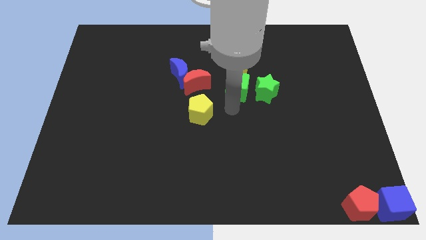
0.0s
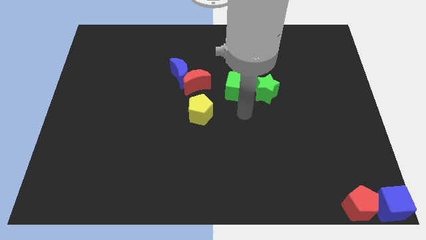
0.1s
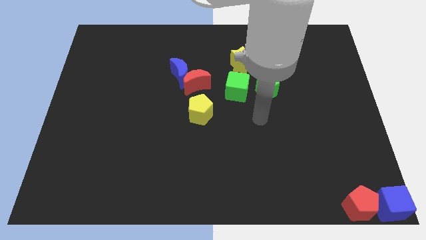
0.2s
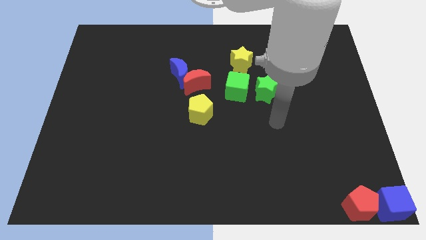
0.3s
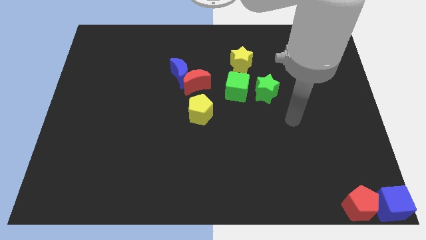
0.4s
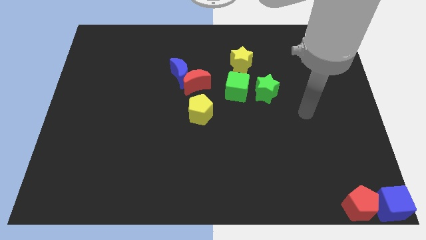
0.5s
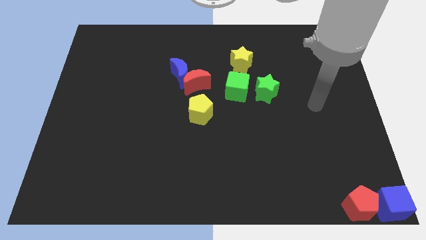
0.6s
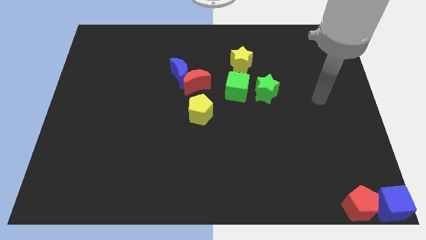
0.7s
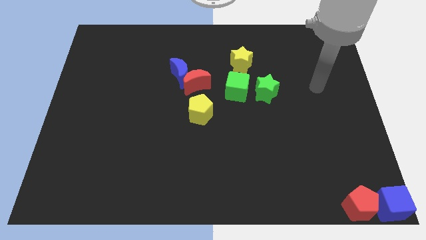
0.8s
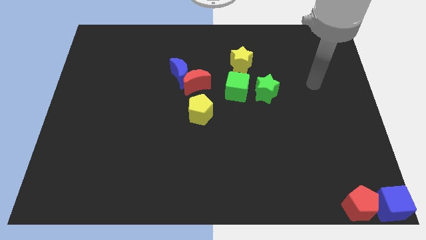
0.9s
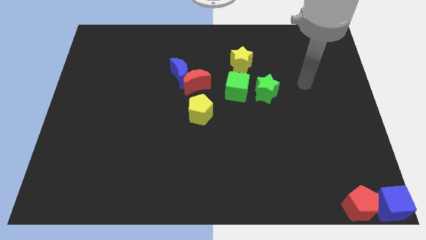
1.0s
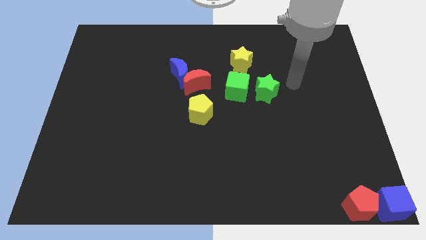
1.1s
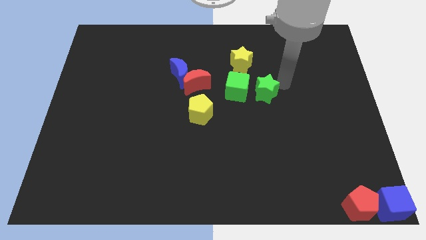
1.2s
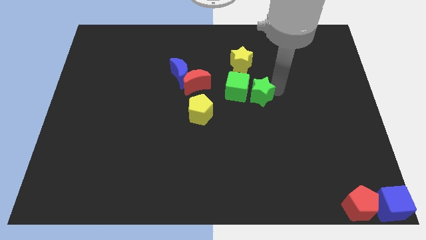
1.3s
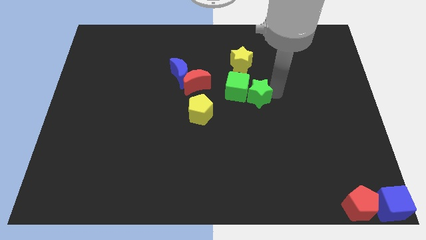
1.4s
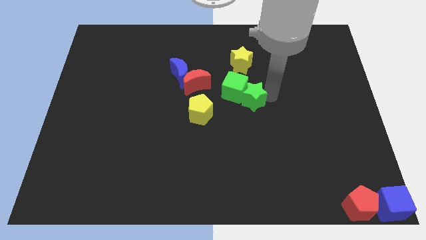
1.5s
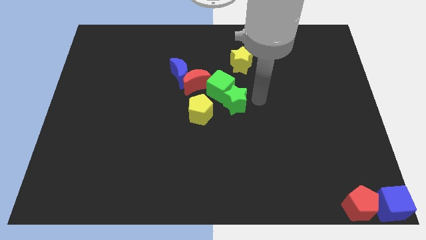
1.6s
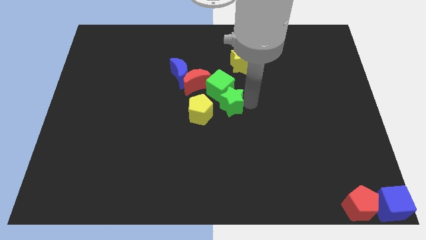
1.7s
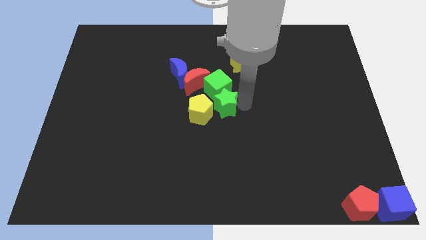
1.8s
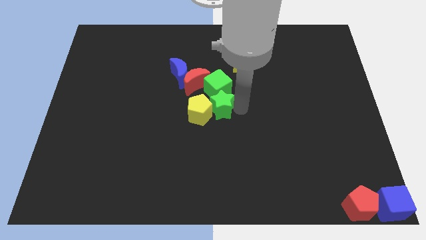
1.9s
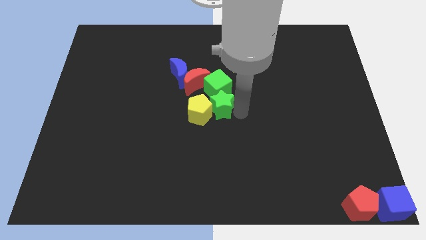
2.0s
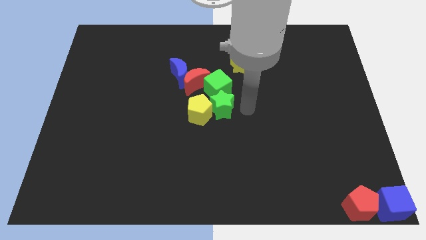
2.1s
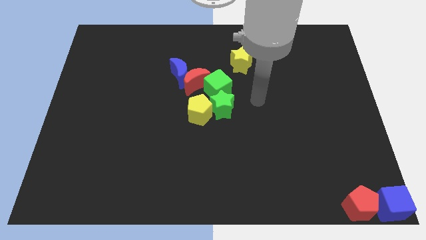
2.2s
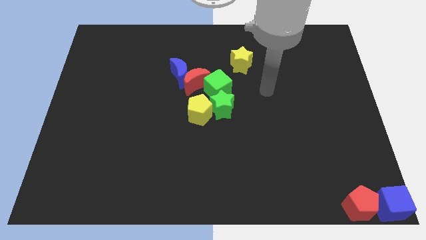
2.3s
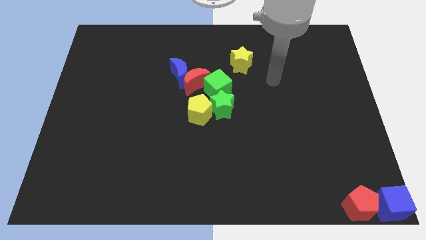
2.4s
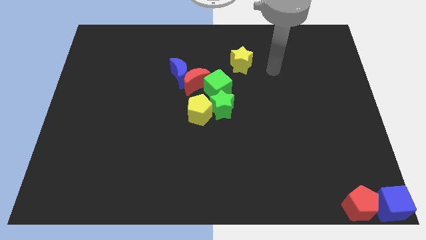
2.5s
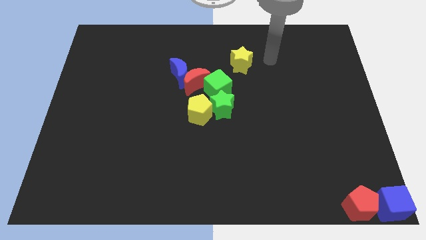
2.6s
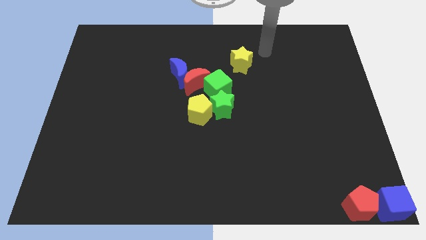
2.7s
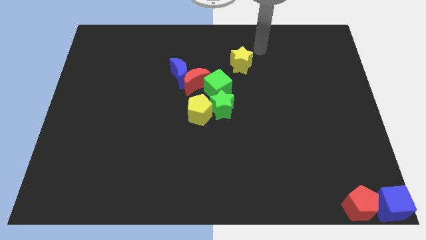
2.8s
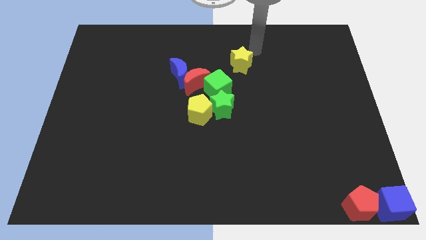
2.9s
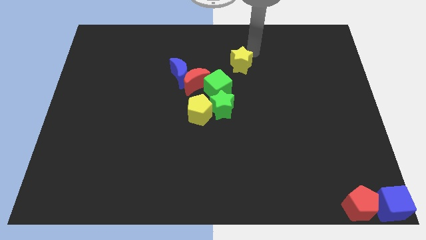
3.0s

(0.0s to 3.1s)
push the green star into the yellow pentagon

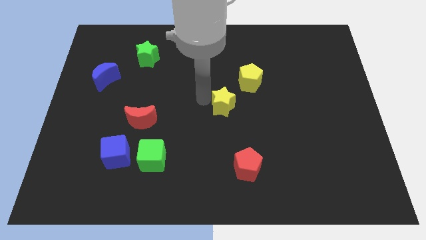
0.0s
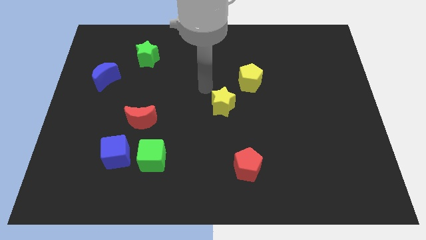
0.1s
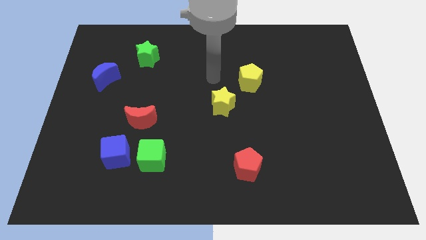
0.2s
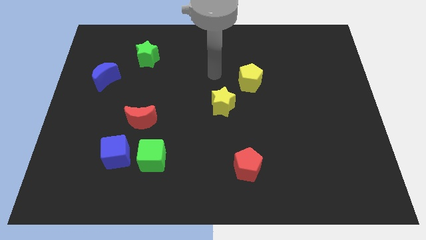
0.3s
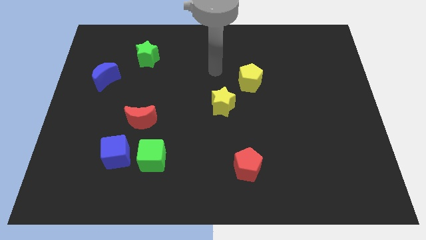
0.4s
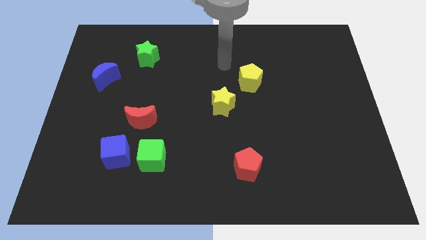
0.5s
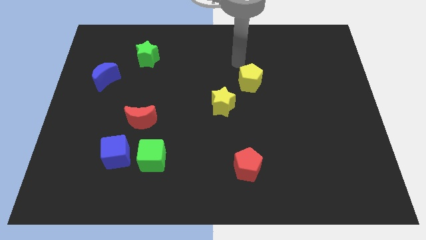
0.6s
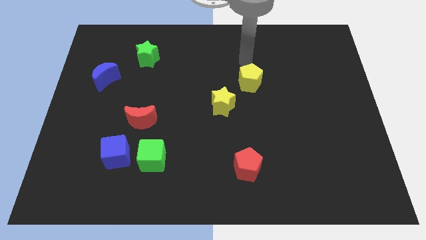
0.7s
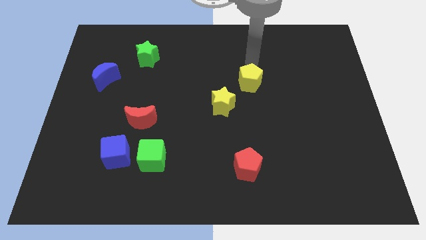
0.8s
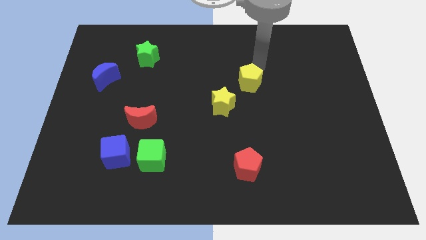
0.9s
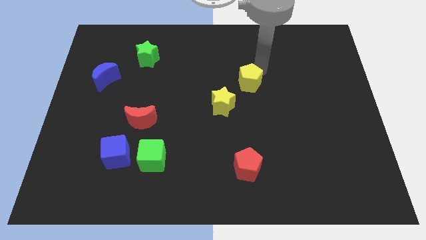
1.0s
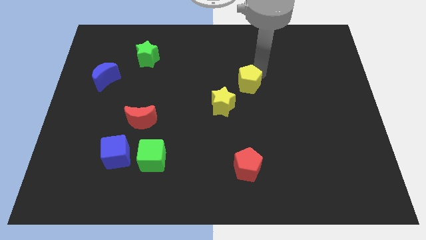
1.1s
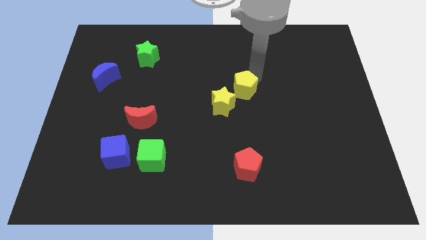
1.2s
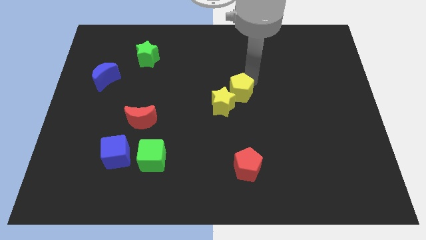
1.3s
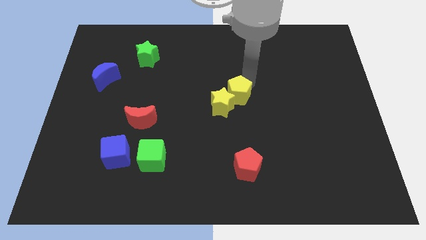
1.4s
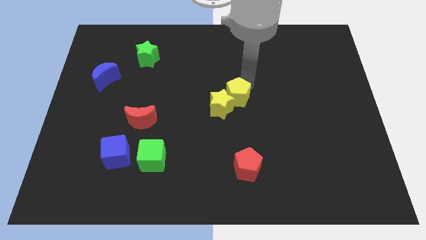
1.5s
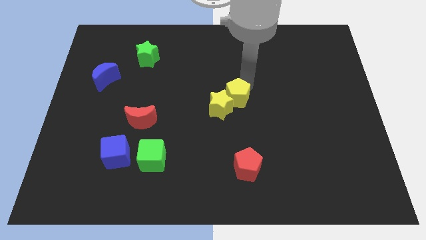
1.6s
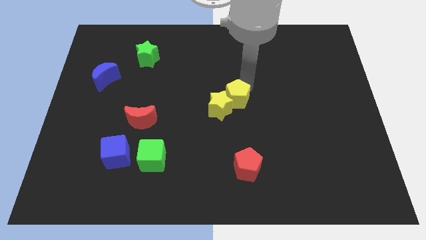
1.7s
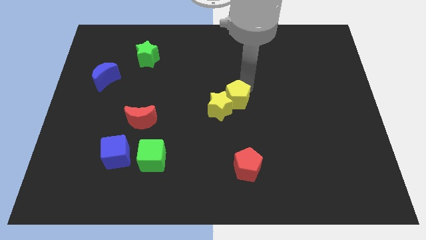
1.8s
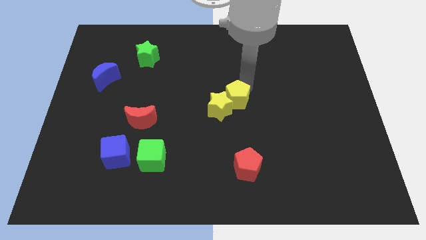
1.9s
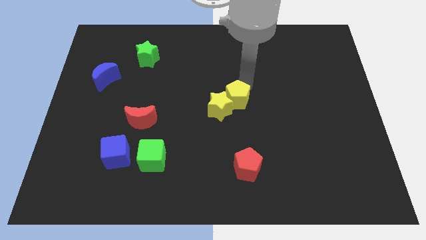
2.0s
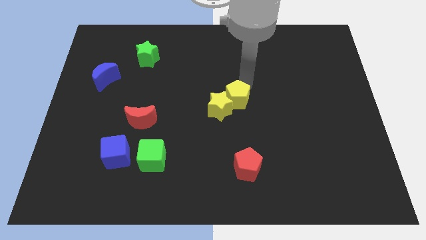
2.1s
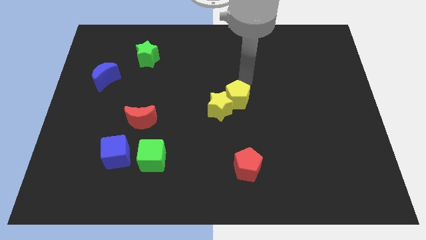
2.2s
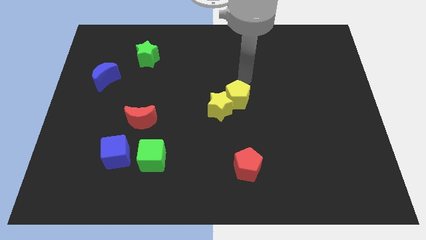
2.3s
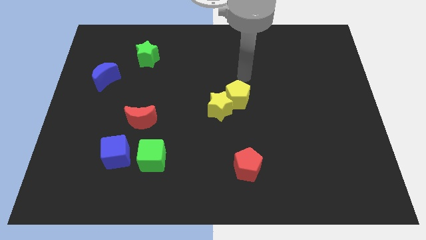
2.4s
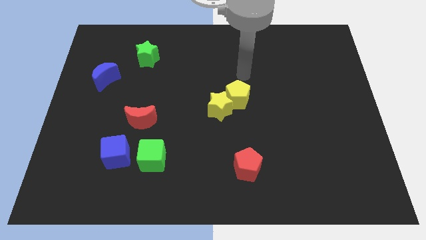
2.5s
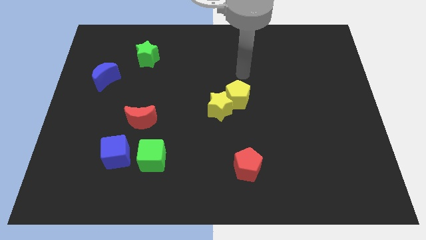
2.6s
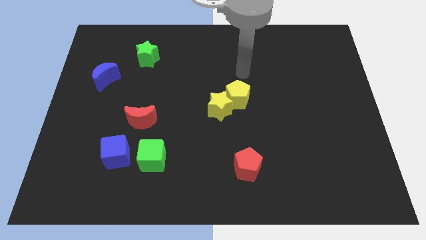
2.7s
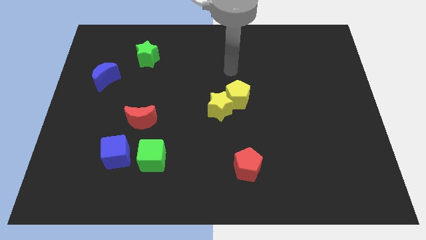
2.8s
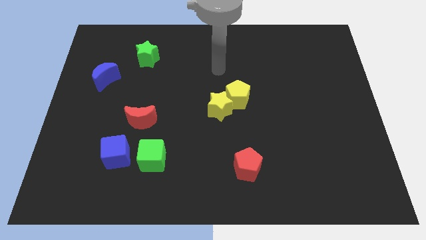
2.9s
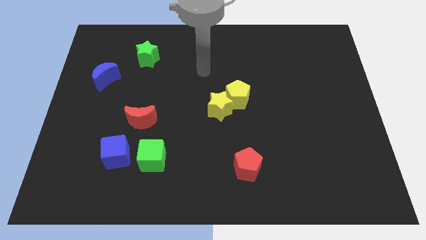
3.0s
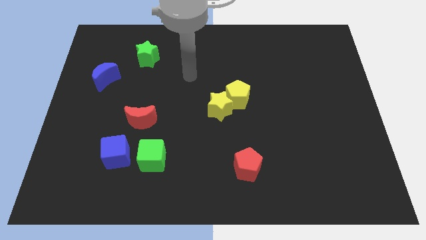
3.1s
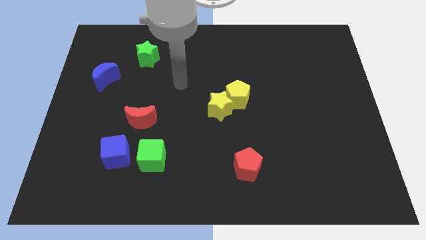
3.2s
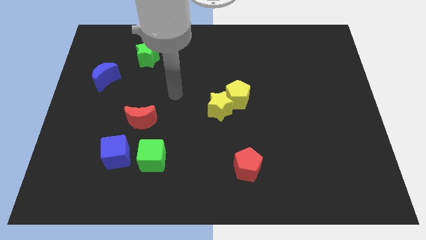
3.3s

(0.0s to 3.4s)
place the yellow pentagon on the top right of the yellow star

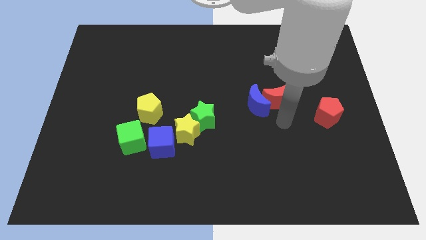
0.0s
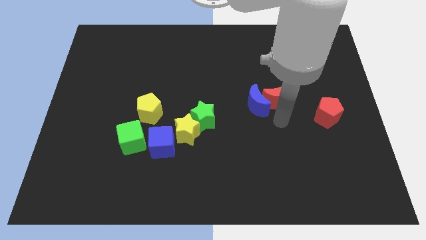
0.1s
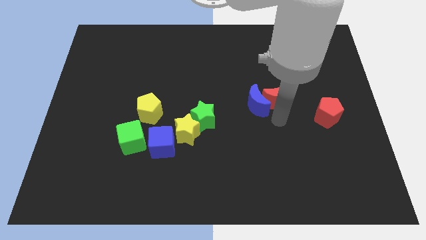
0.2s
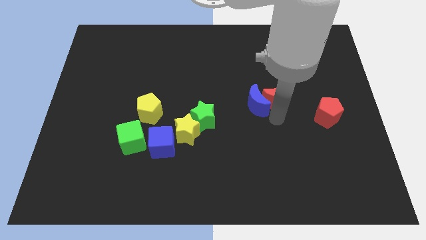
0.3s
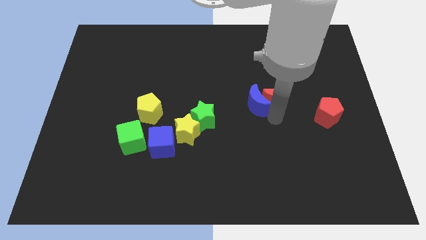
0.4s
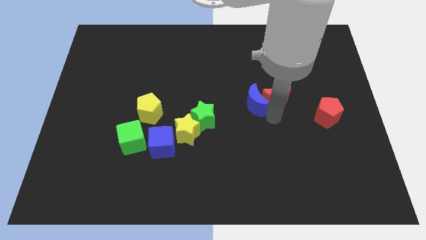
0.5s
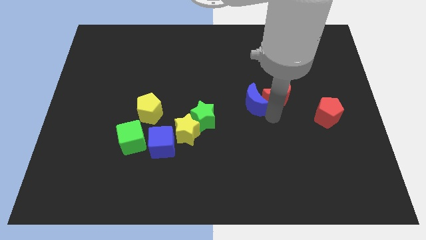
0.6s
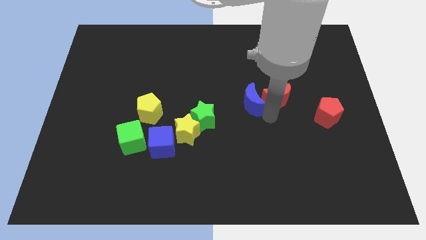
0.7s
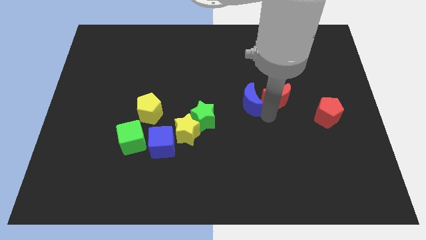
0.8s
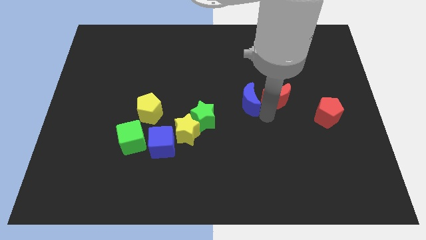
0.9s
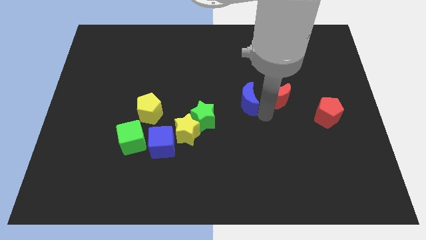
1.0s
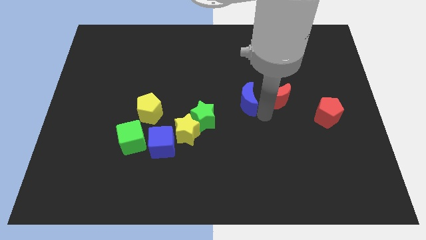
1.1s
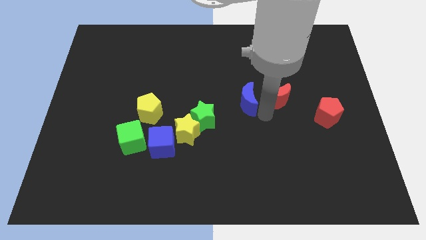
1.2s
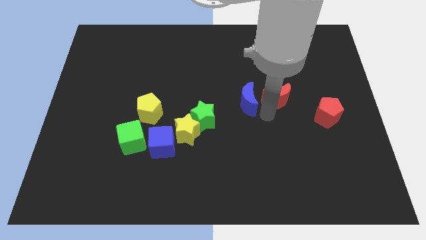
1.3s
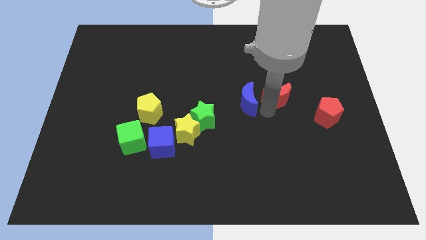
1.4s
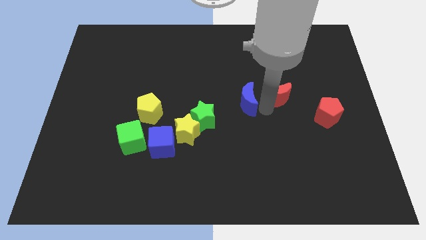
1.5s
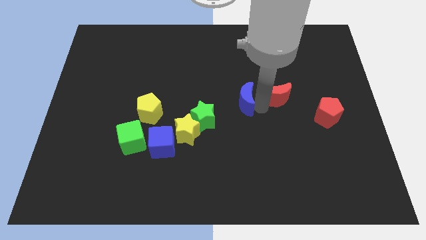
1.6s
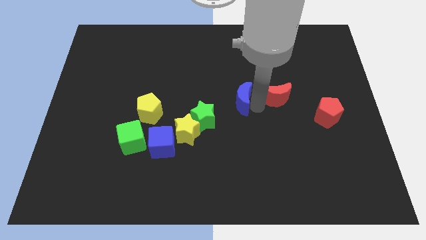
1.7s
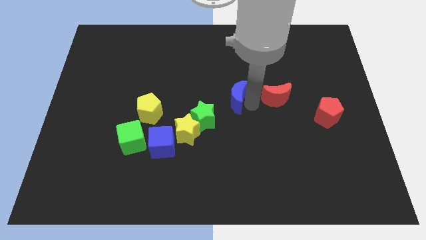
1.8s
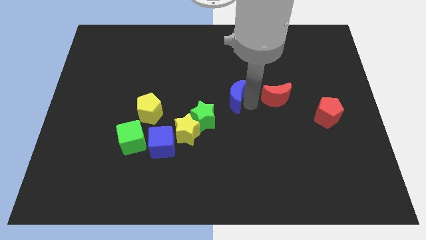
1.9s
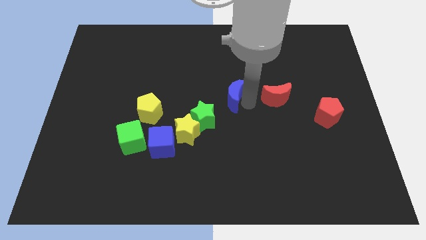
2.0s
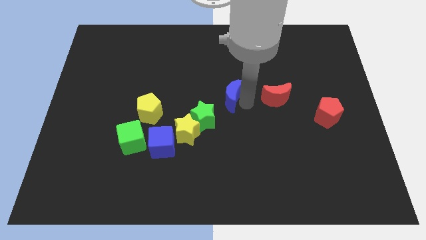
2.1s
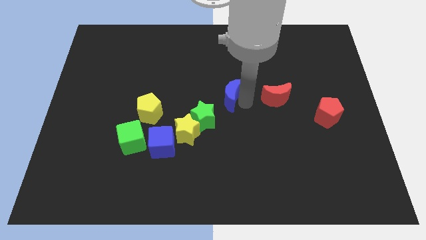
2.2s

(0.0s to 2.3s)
separate the blue moon from red moon

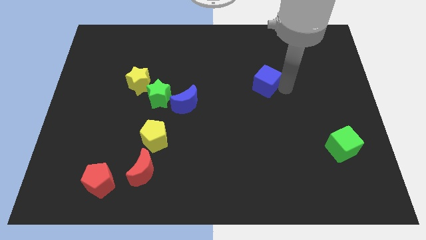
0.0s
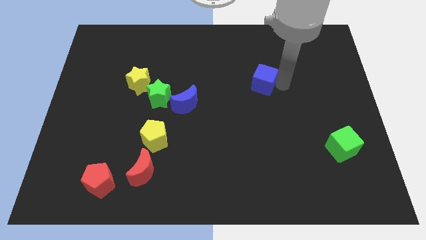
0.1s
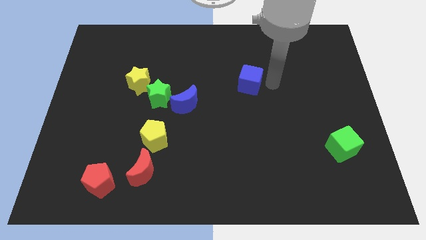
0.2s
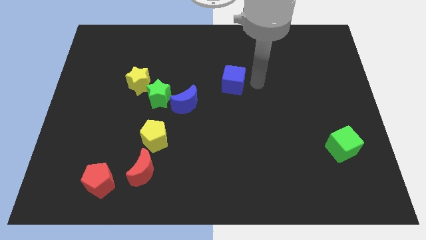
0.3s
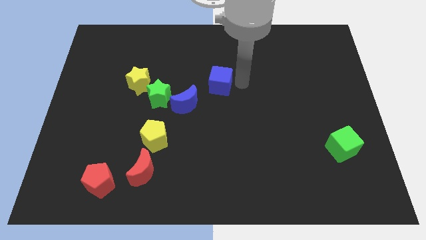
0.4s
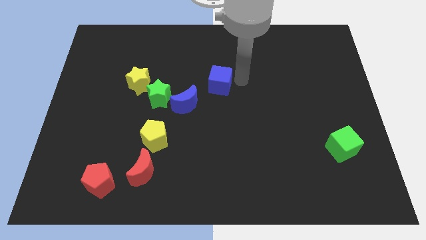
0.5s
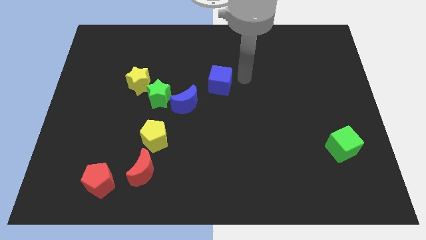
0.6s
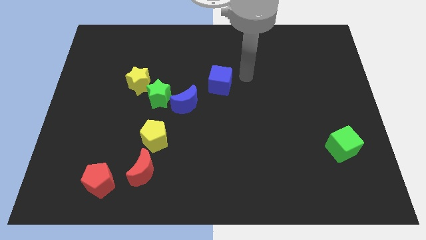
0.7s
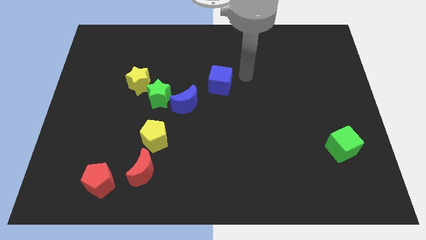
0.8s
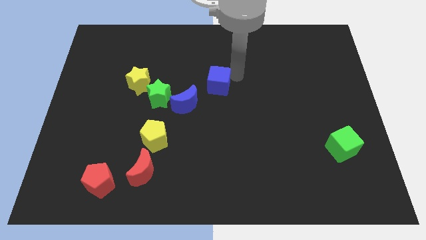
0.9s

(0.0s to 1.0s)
push blue cube slightly to the left
